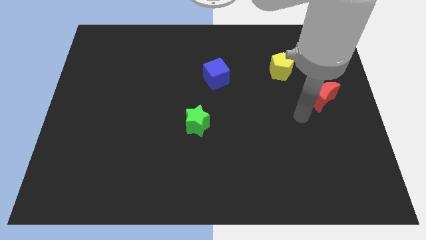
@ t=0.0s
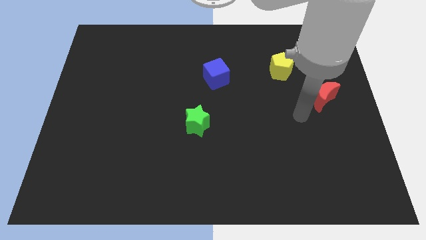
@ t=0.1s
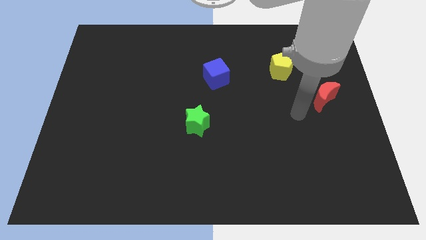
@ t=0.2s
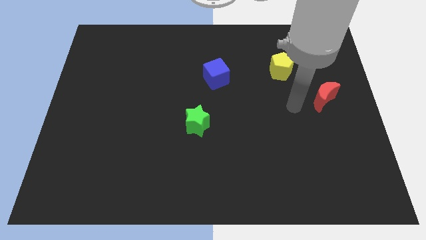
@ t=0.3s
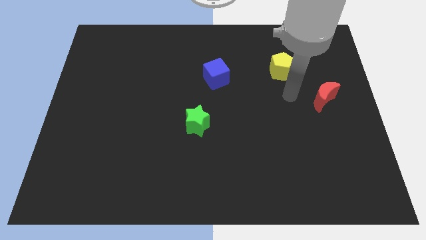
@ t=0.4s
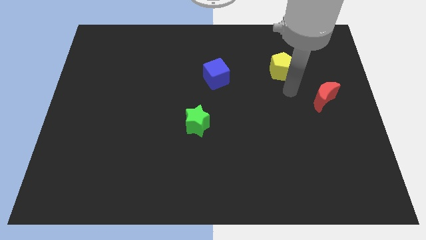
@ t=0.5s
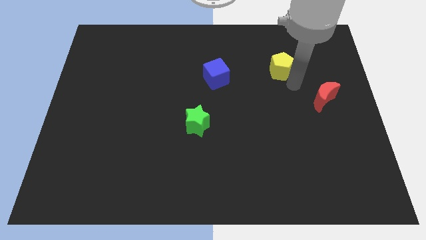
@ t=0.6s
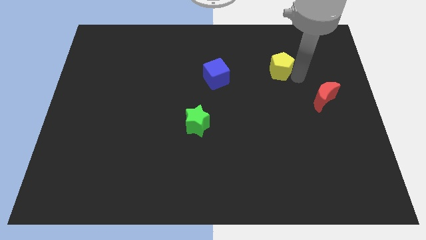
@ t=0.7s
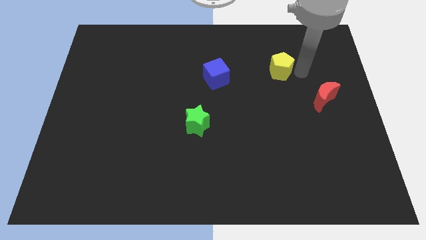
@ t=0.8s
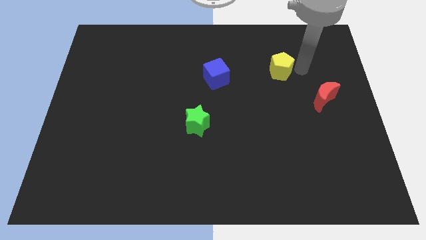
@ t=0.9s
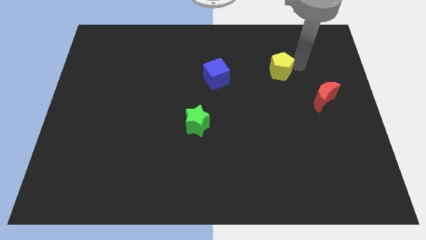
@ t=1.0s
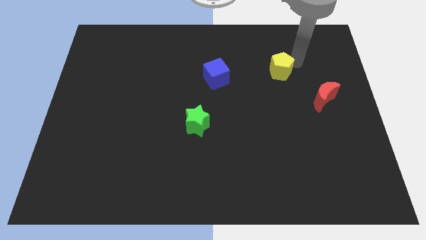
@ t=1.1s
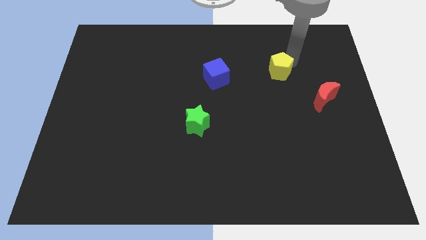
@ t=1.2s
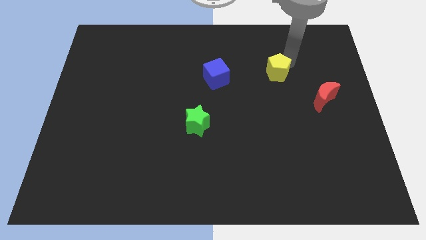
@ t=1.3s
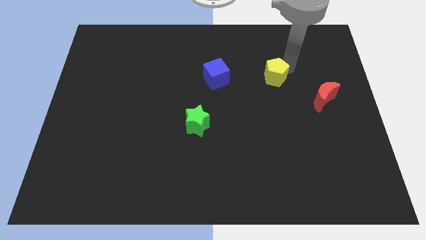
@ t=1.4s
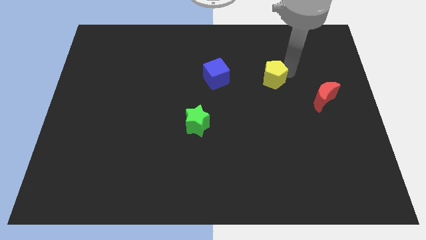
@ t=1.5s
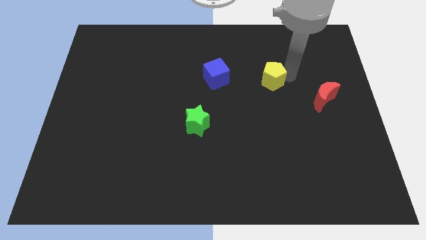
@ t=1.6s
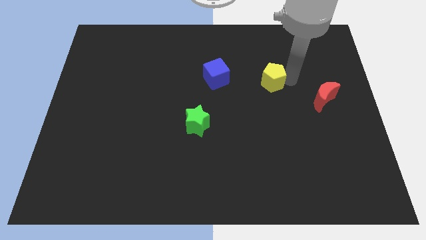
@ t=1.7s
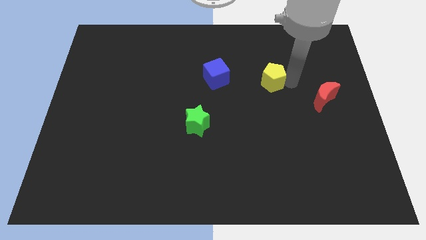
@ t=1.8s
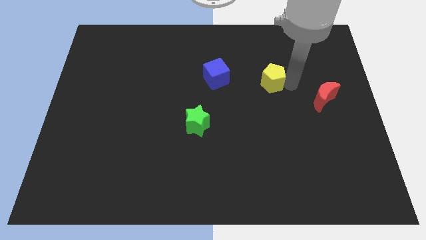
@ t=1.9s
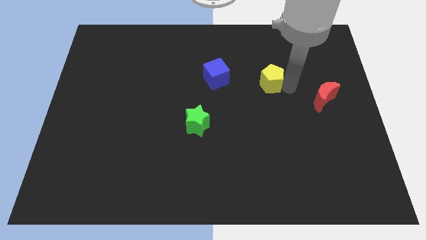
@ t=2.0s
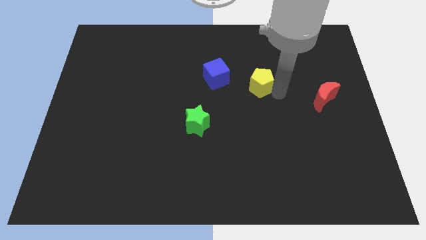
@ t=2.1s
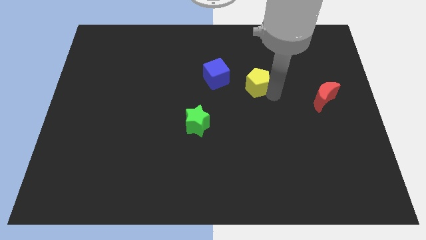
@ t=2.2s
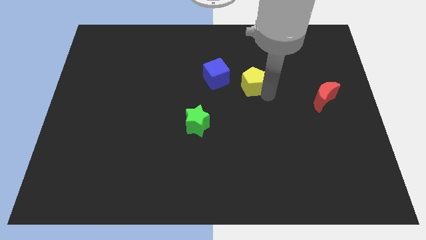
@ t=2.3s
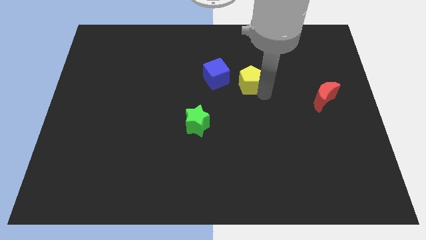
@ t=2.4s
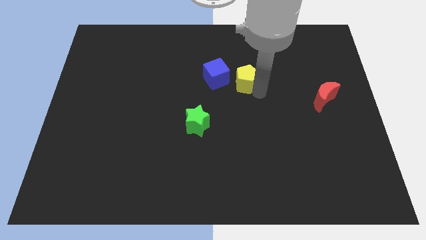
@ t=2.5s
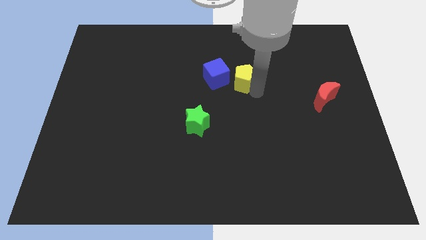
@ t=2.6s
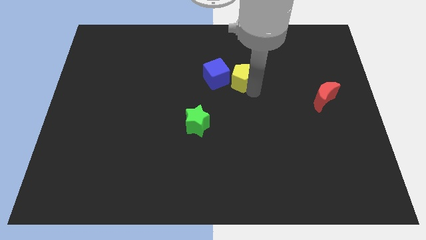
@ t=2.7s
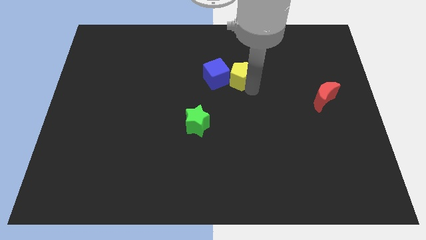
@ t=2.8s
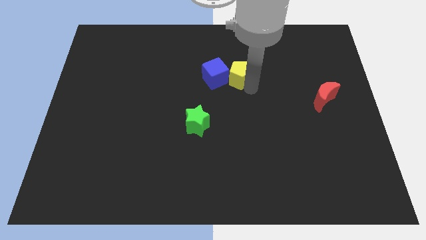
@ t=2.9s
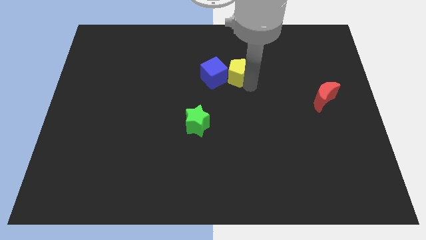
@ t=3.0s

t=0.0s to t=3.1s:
slide the pentagon to the cube

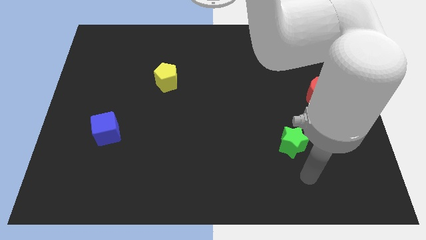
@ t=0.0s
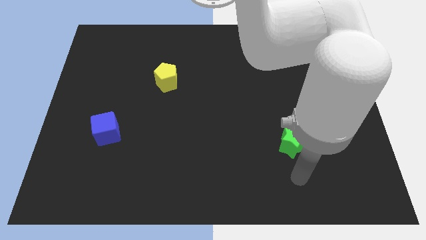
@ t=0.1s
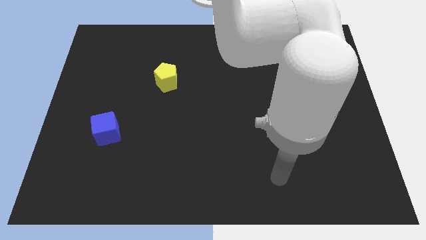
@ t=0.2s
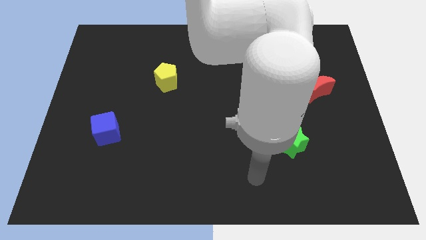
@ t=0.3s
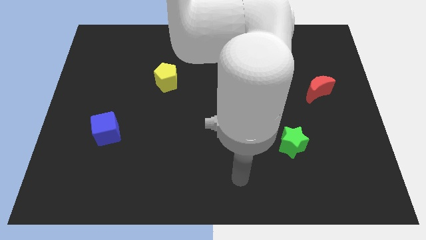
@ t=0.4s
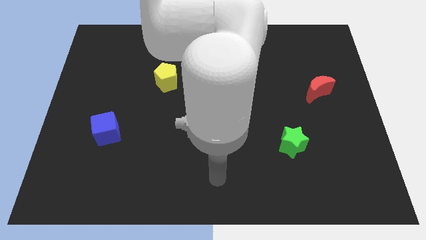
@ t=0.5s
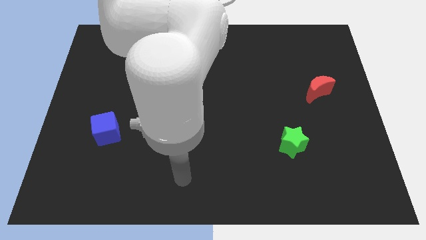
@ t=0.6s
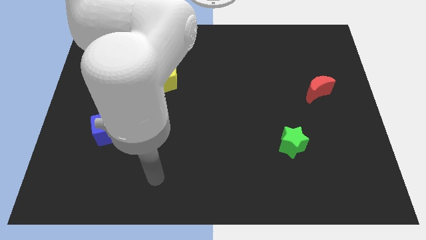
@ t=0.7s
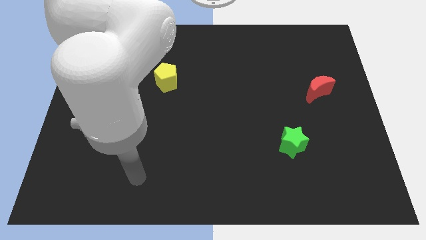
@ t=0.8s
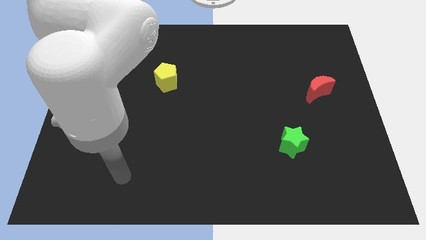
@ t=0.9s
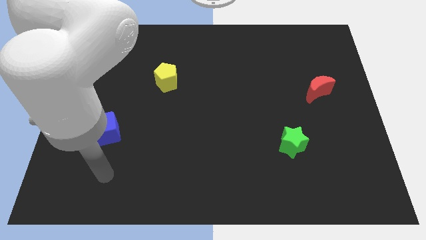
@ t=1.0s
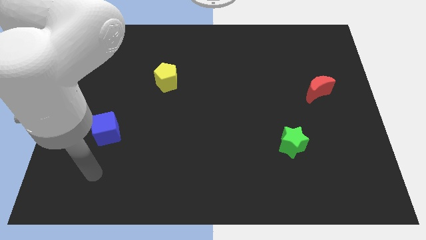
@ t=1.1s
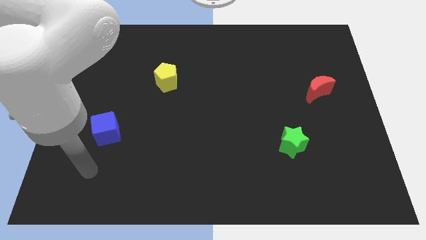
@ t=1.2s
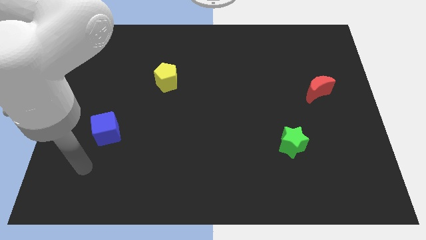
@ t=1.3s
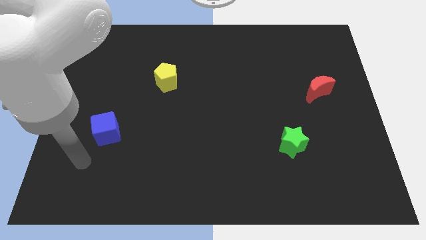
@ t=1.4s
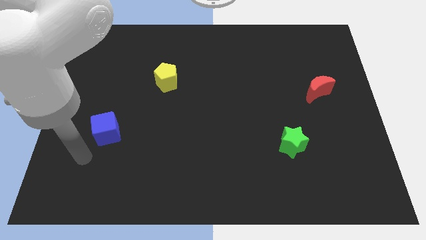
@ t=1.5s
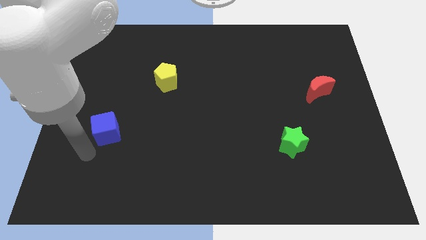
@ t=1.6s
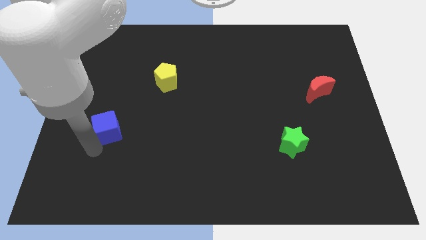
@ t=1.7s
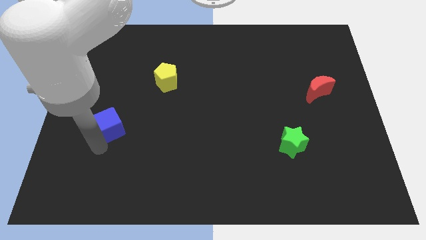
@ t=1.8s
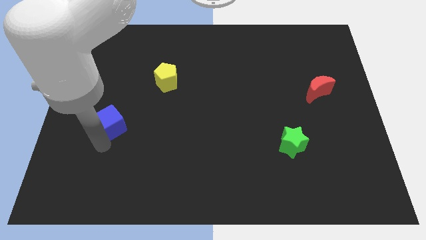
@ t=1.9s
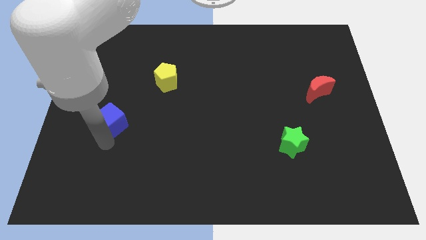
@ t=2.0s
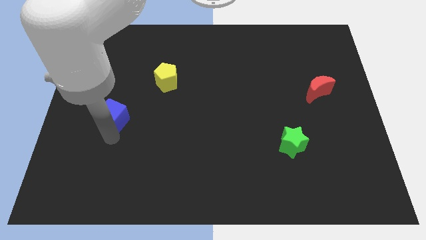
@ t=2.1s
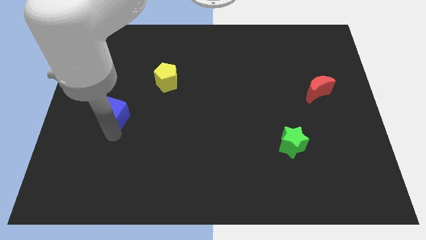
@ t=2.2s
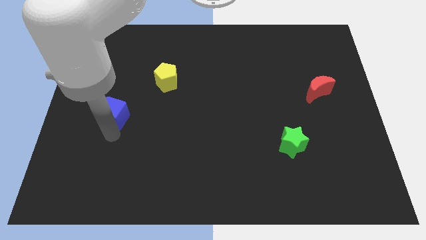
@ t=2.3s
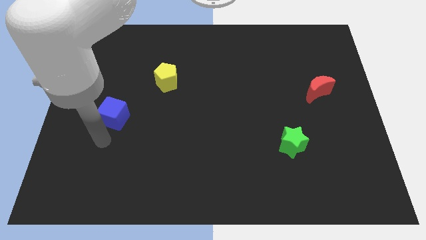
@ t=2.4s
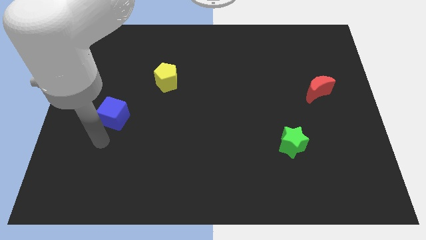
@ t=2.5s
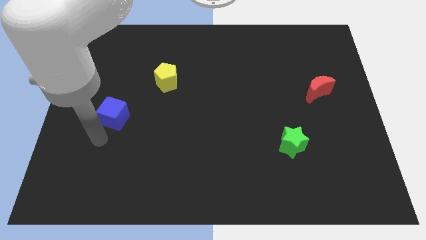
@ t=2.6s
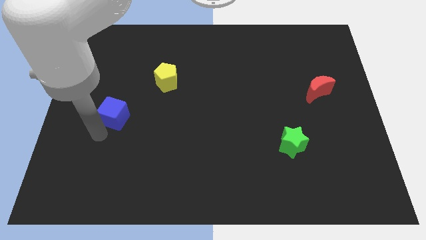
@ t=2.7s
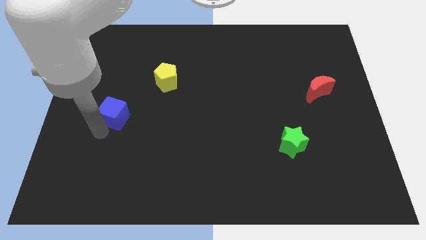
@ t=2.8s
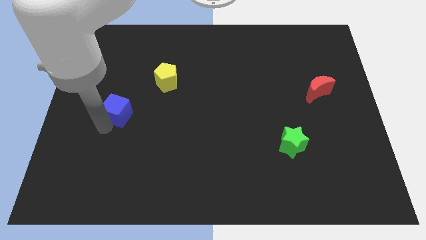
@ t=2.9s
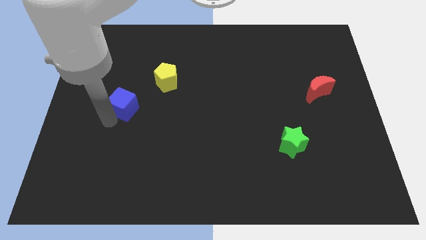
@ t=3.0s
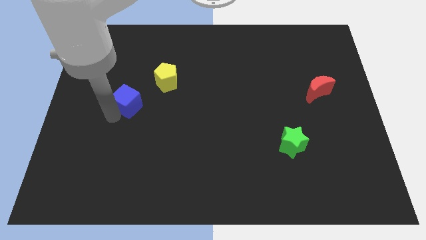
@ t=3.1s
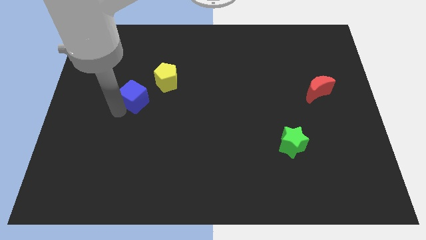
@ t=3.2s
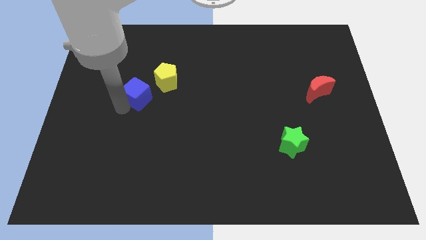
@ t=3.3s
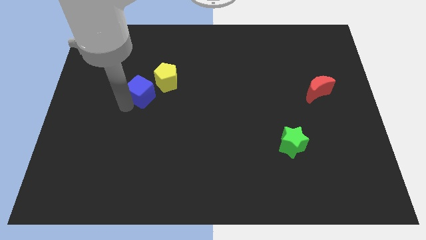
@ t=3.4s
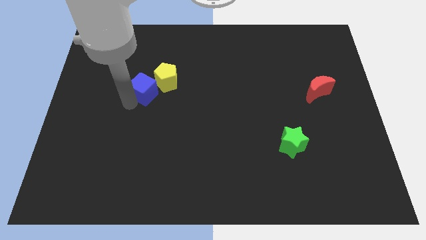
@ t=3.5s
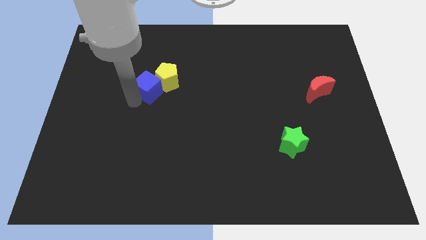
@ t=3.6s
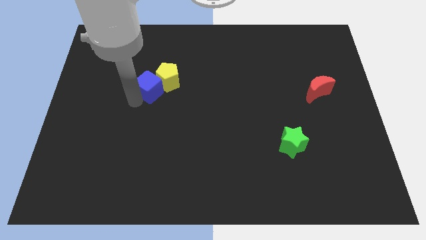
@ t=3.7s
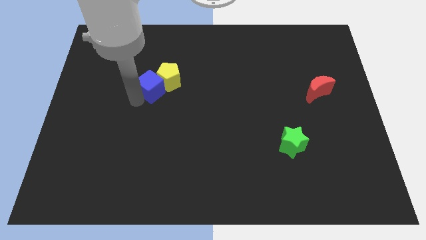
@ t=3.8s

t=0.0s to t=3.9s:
put the blue cube towards the pentagon

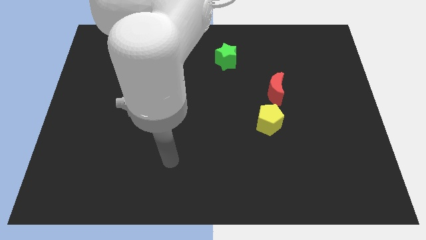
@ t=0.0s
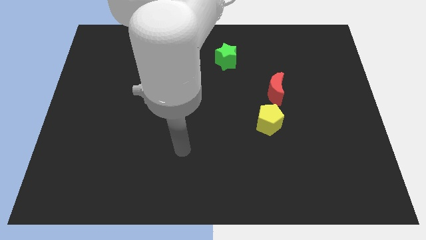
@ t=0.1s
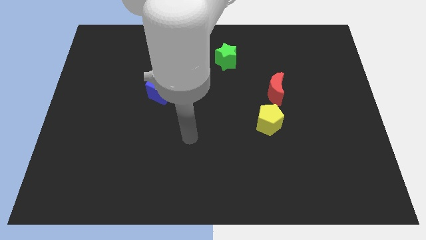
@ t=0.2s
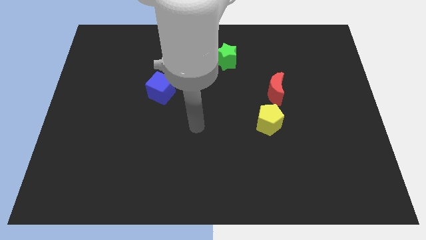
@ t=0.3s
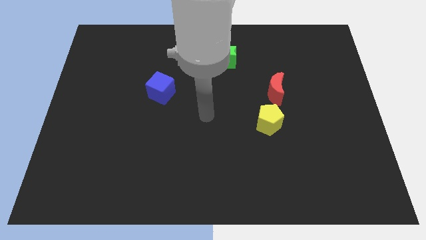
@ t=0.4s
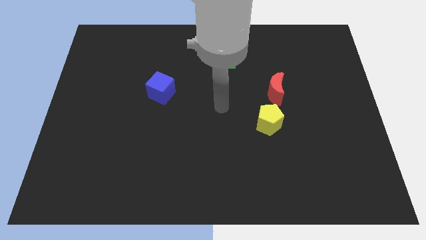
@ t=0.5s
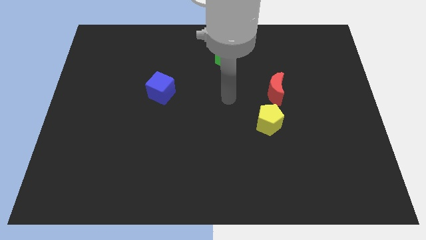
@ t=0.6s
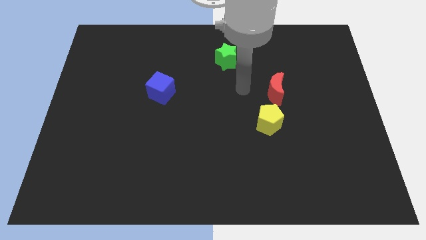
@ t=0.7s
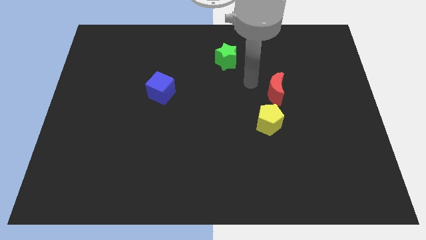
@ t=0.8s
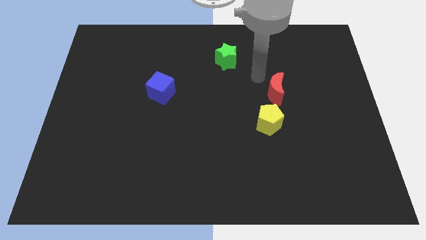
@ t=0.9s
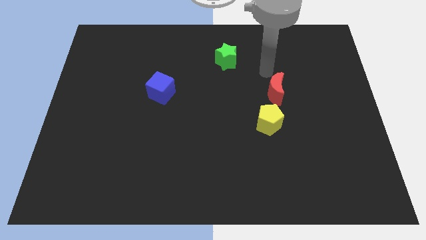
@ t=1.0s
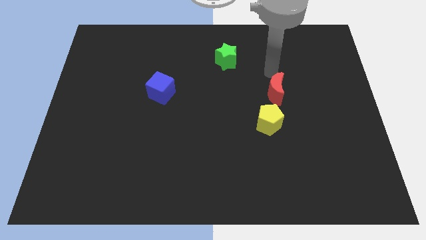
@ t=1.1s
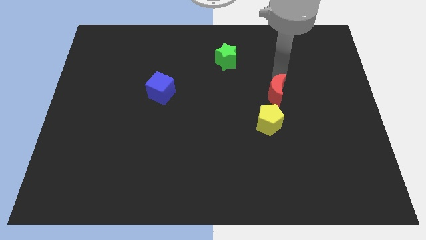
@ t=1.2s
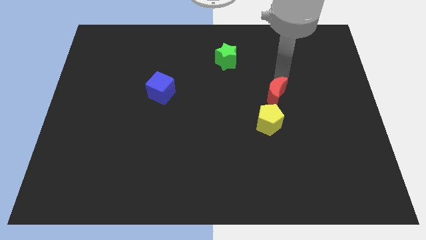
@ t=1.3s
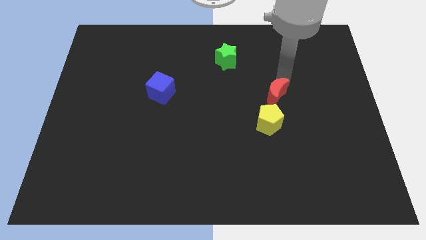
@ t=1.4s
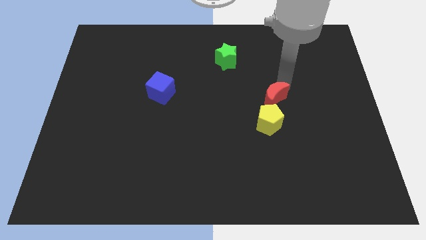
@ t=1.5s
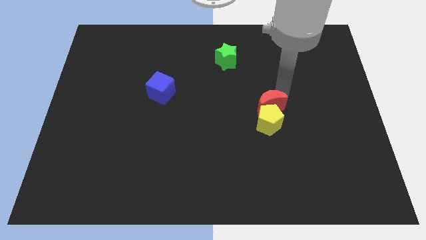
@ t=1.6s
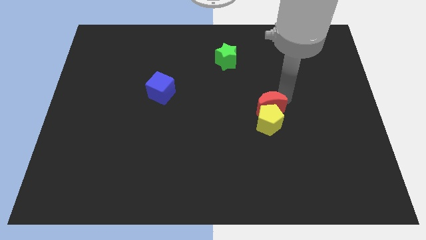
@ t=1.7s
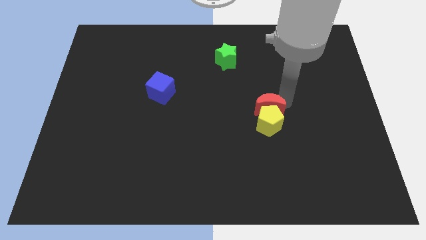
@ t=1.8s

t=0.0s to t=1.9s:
push the red block to the pentagon
